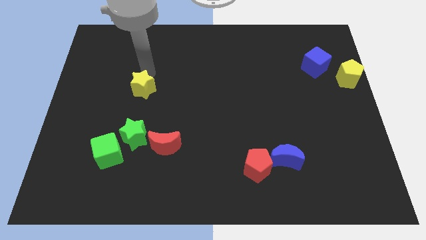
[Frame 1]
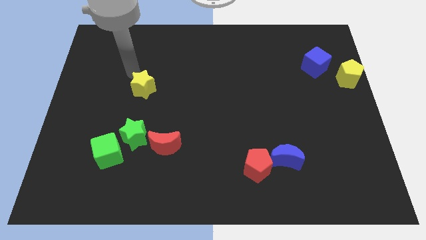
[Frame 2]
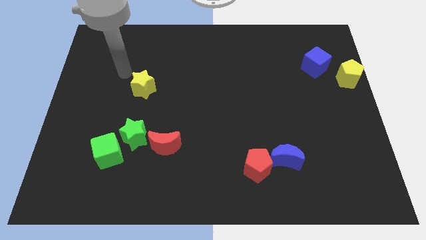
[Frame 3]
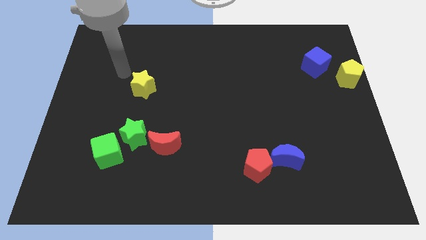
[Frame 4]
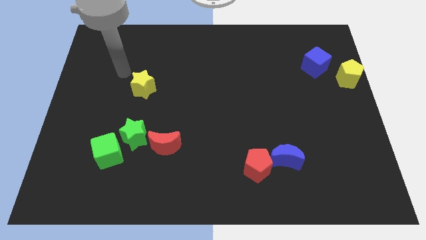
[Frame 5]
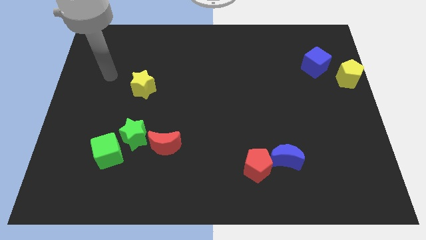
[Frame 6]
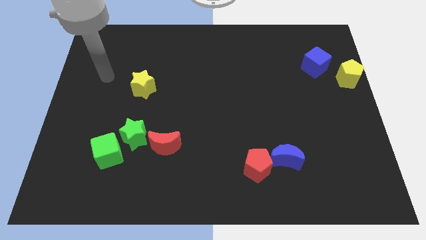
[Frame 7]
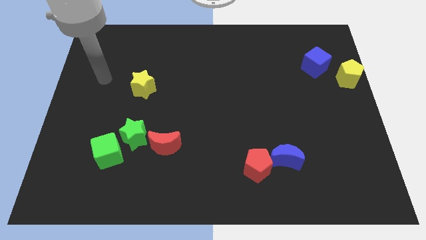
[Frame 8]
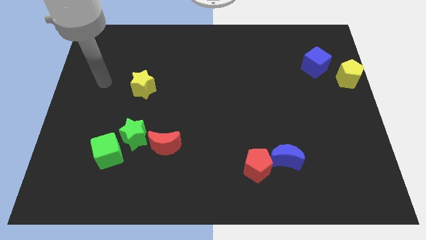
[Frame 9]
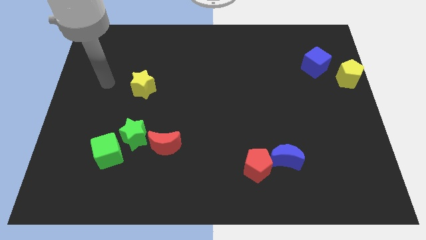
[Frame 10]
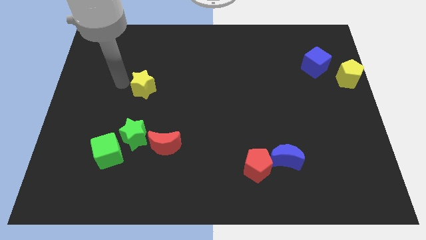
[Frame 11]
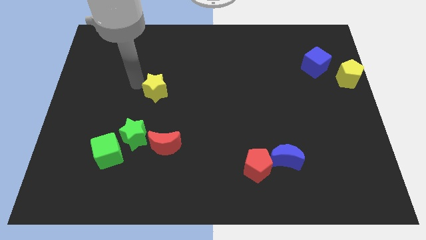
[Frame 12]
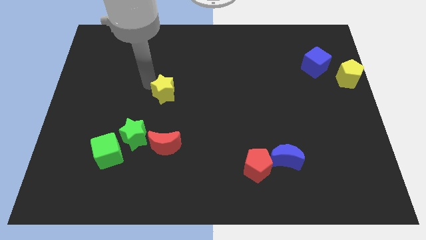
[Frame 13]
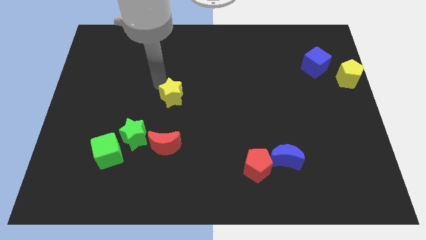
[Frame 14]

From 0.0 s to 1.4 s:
place the yellow star vertically above the red moon

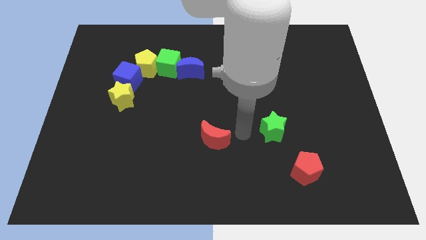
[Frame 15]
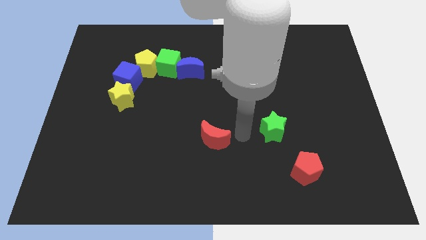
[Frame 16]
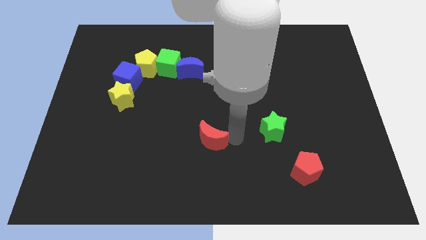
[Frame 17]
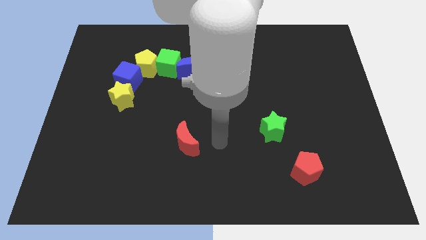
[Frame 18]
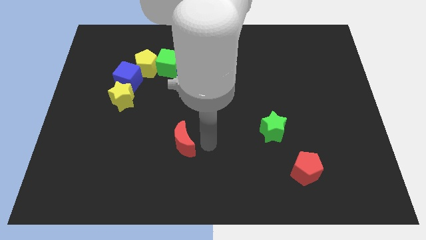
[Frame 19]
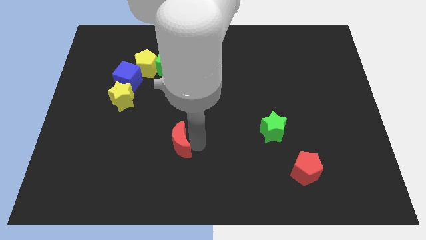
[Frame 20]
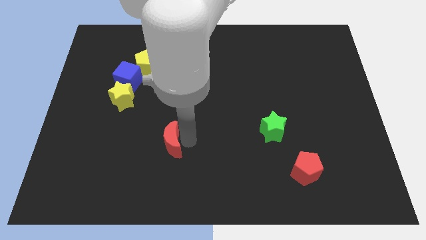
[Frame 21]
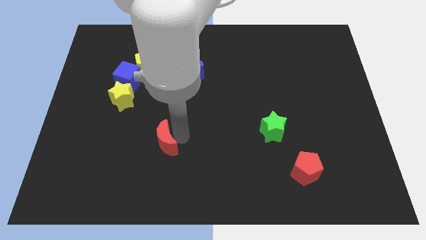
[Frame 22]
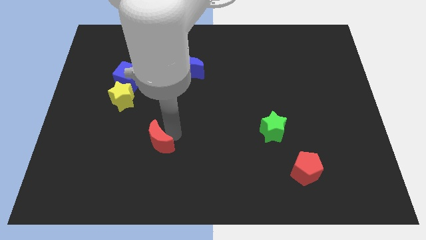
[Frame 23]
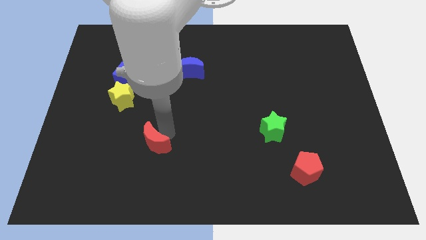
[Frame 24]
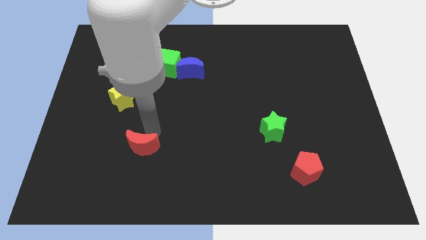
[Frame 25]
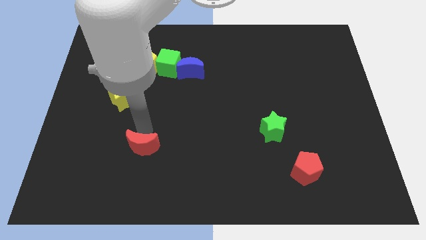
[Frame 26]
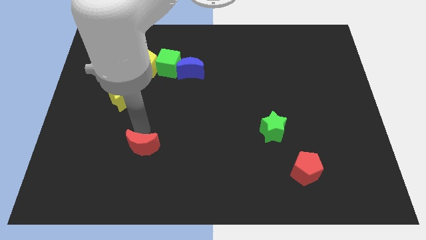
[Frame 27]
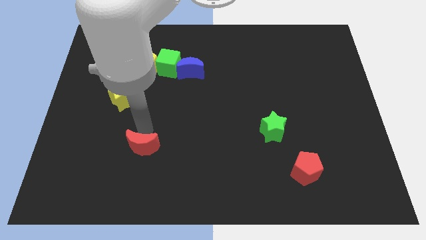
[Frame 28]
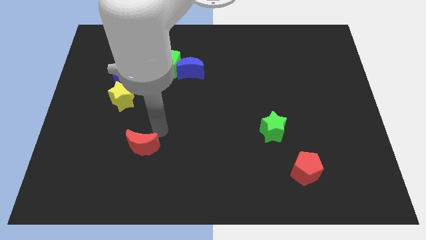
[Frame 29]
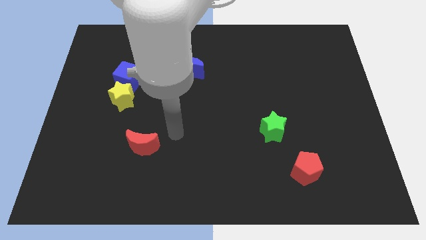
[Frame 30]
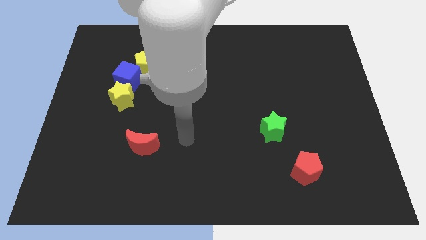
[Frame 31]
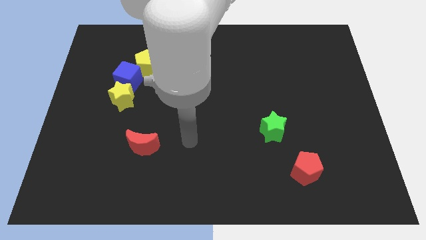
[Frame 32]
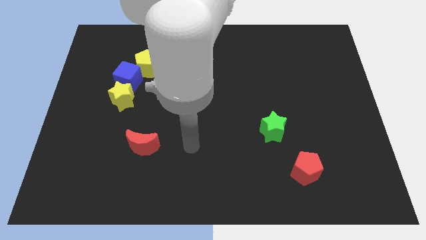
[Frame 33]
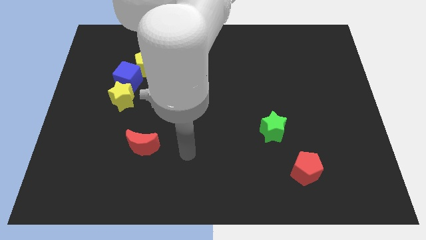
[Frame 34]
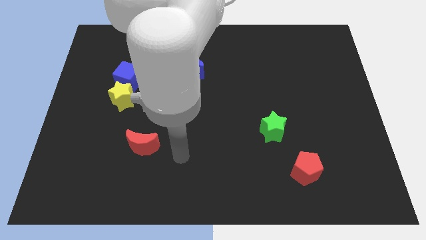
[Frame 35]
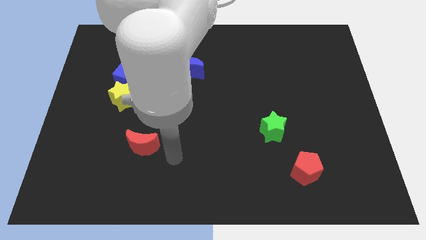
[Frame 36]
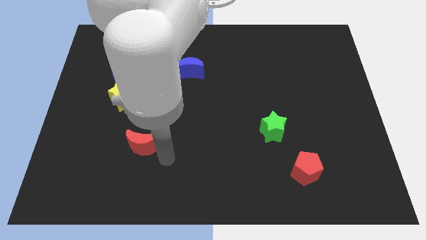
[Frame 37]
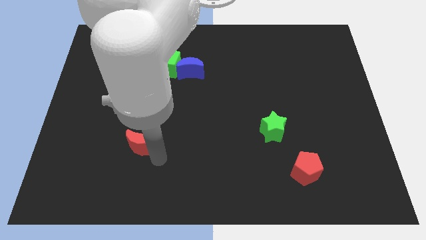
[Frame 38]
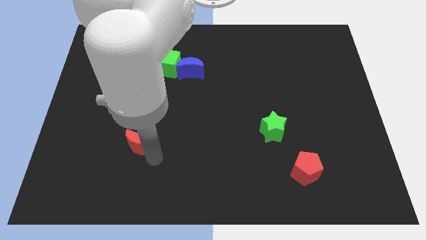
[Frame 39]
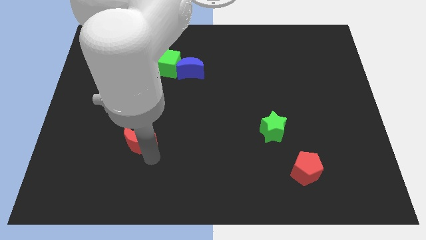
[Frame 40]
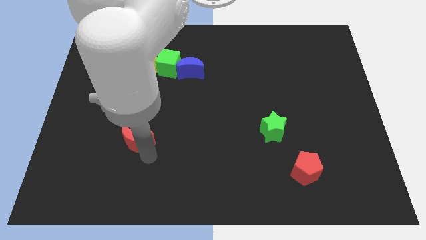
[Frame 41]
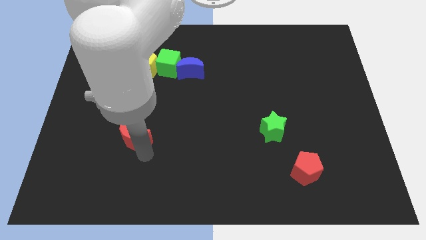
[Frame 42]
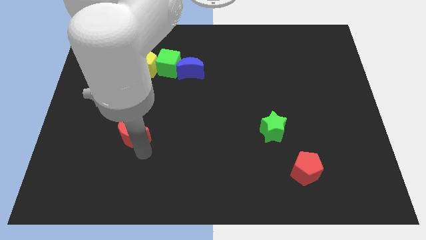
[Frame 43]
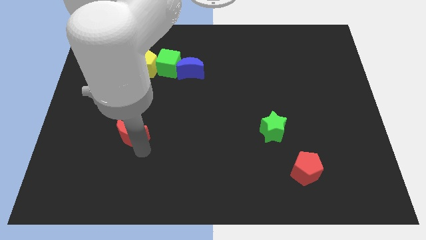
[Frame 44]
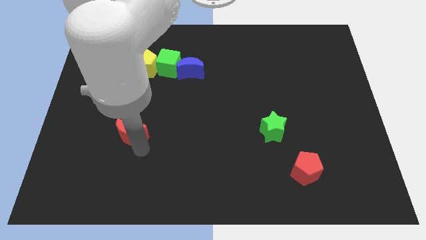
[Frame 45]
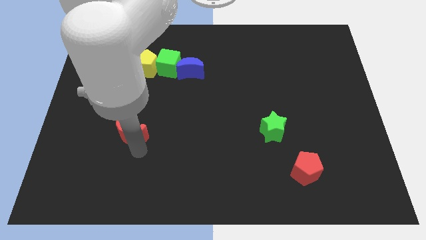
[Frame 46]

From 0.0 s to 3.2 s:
push the red moon to center left

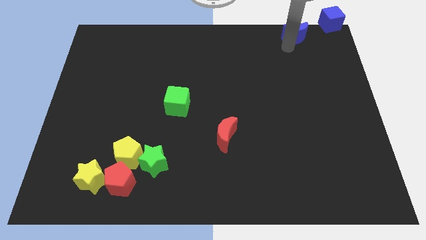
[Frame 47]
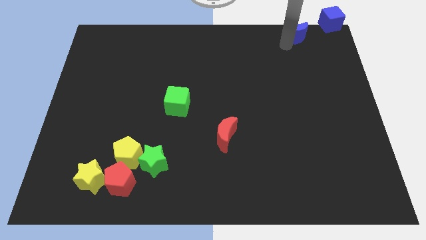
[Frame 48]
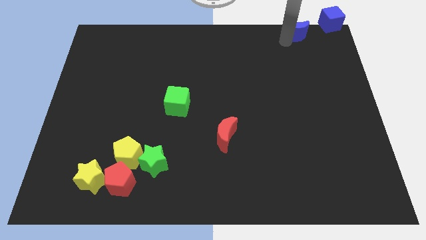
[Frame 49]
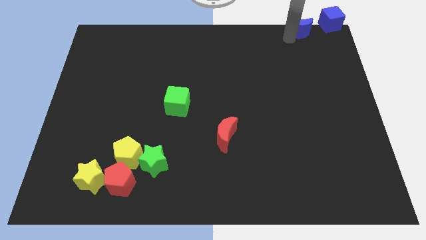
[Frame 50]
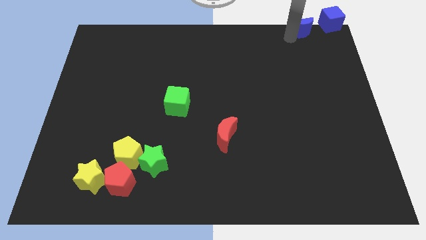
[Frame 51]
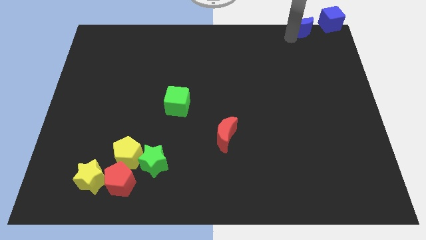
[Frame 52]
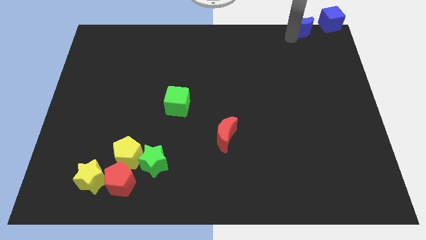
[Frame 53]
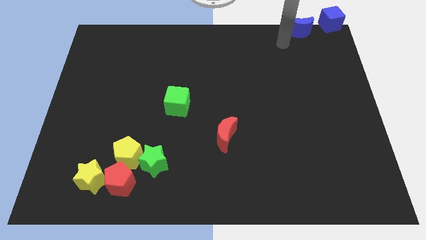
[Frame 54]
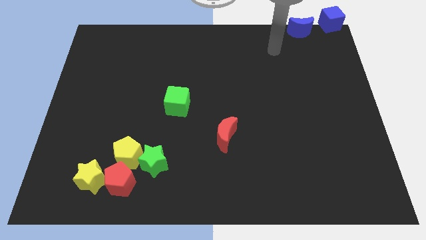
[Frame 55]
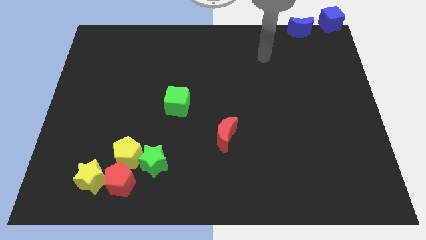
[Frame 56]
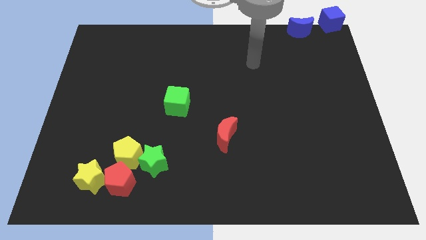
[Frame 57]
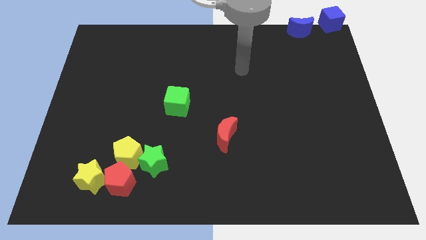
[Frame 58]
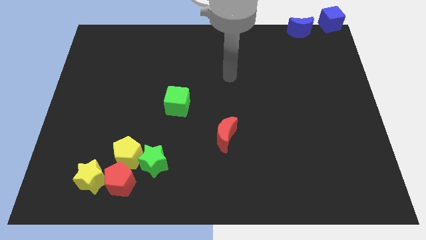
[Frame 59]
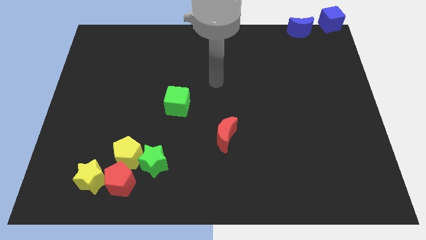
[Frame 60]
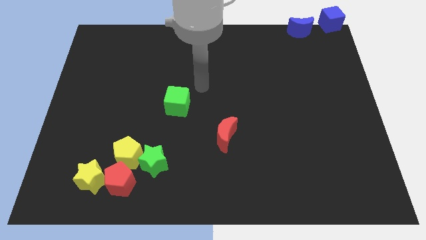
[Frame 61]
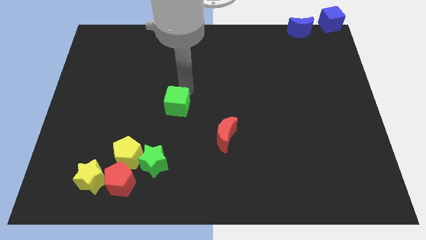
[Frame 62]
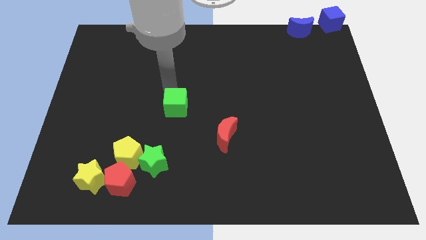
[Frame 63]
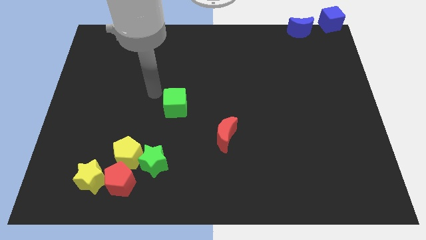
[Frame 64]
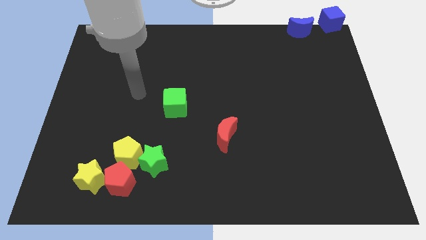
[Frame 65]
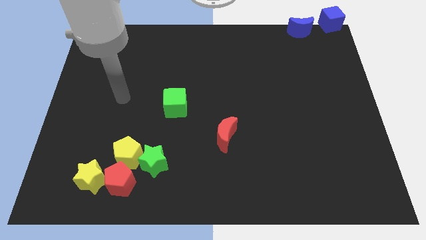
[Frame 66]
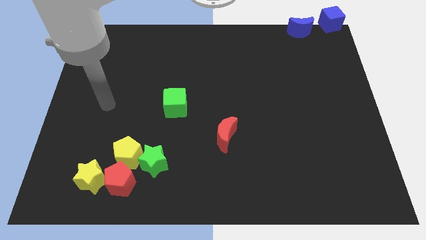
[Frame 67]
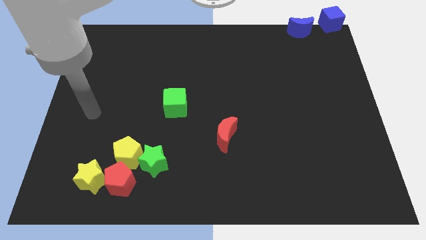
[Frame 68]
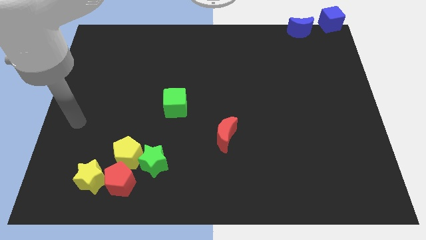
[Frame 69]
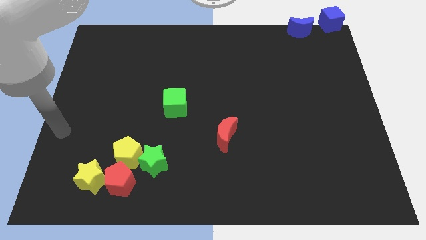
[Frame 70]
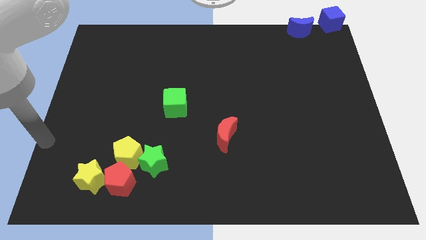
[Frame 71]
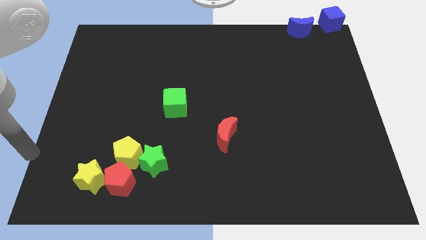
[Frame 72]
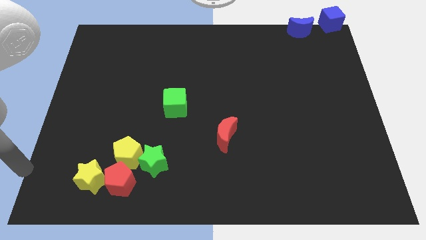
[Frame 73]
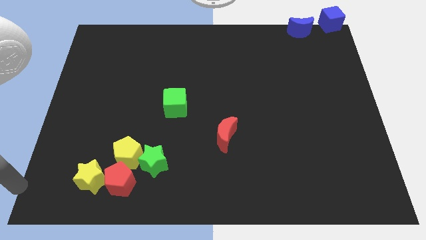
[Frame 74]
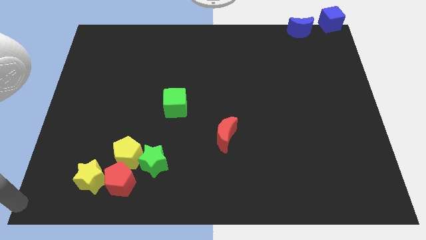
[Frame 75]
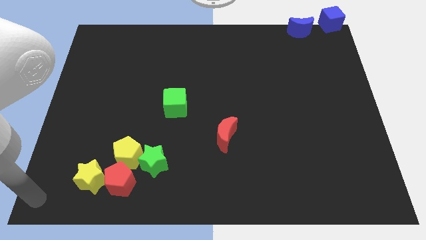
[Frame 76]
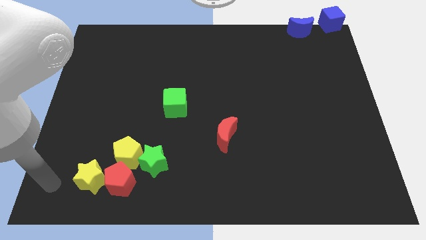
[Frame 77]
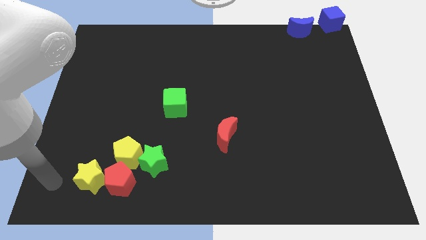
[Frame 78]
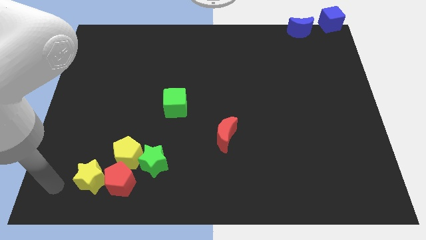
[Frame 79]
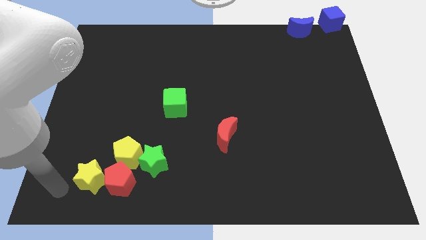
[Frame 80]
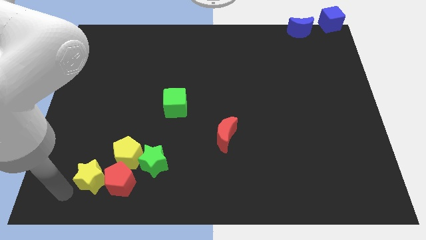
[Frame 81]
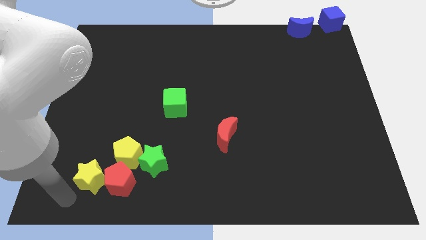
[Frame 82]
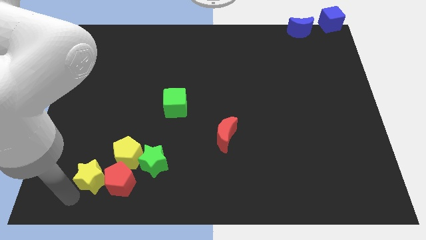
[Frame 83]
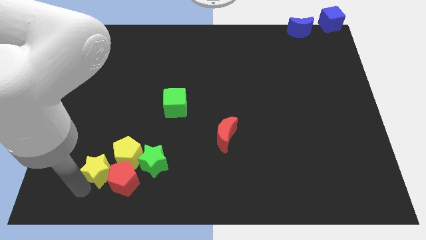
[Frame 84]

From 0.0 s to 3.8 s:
place the arm diagonally to the yellow star

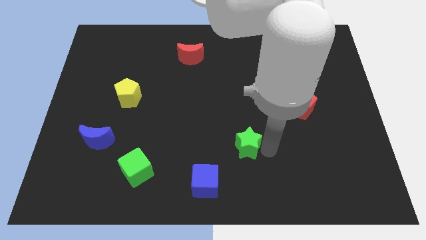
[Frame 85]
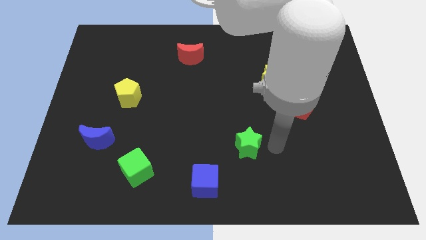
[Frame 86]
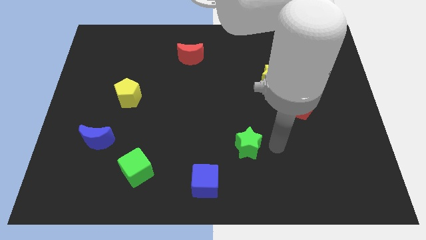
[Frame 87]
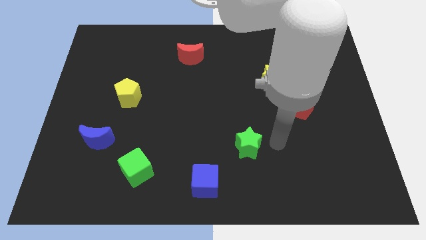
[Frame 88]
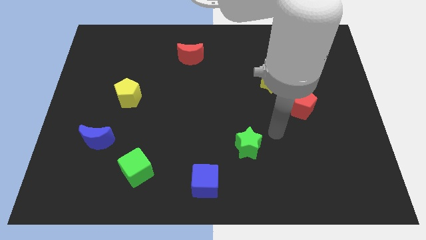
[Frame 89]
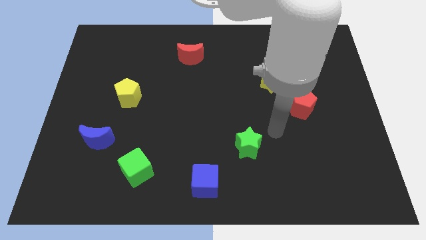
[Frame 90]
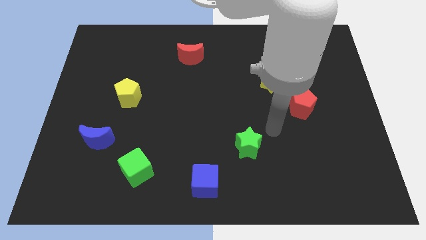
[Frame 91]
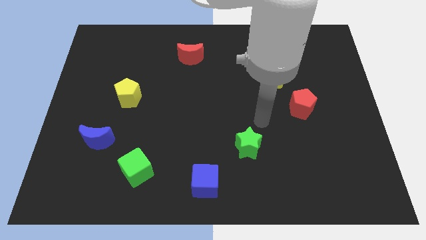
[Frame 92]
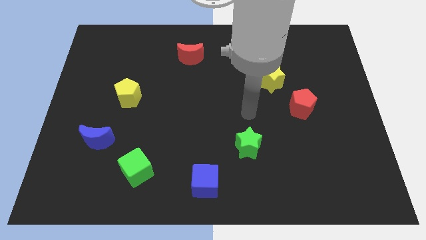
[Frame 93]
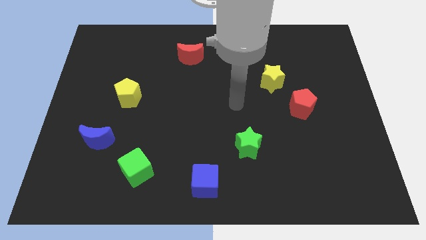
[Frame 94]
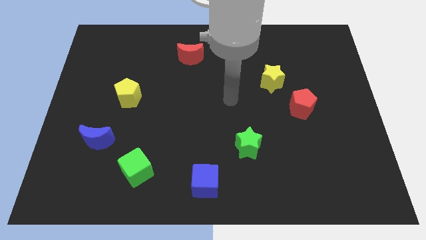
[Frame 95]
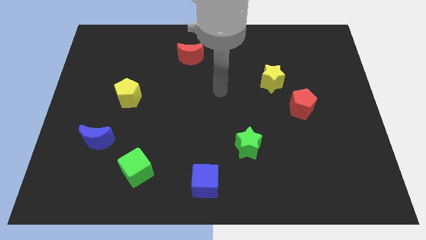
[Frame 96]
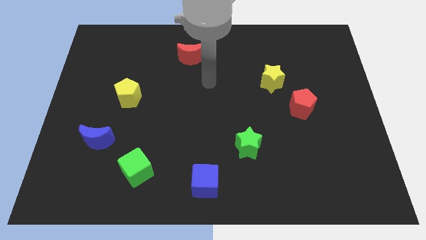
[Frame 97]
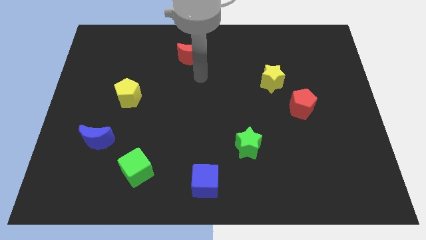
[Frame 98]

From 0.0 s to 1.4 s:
move the arm away from the green star
